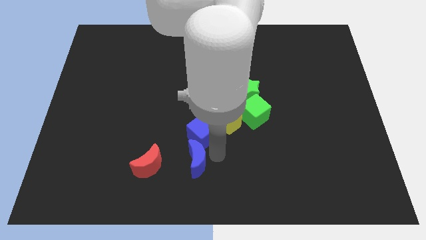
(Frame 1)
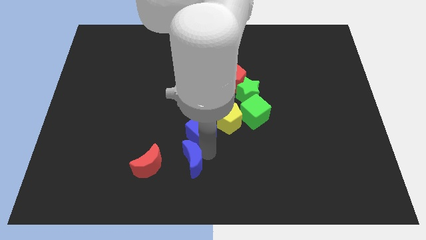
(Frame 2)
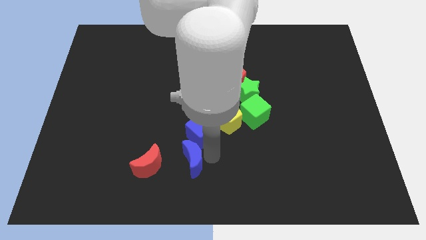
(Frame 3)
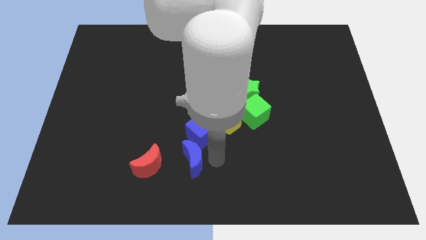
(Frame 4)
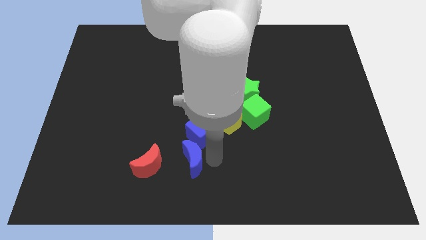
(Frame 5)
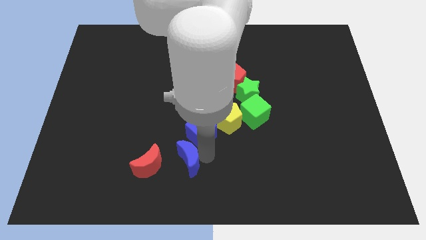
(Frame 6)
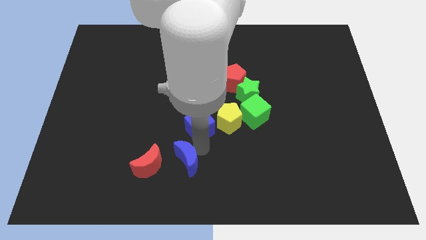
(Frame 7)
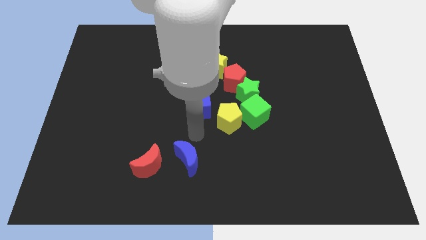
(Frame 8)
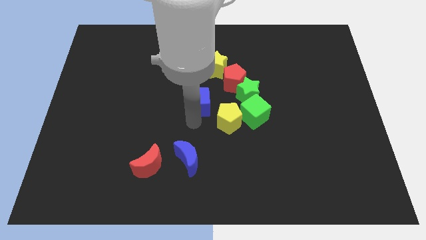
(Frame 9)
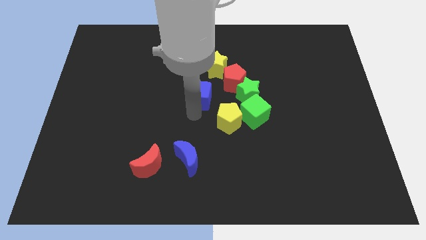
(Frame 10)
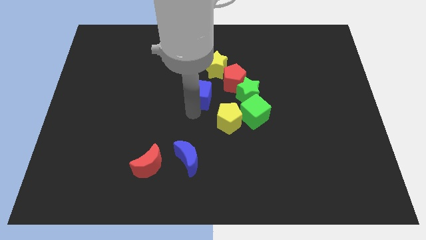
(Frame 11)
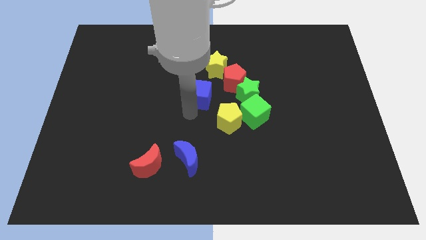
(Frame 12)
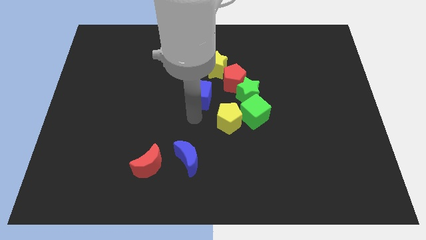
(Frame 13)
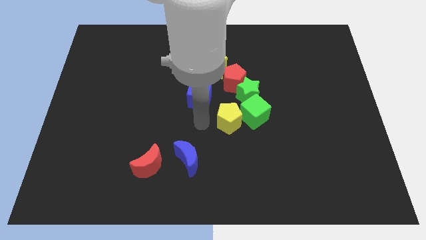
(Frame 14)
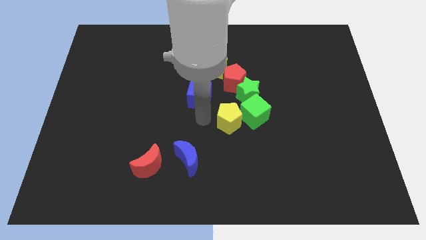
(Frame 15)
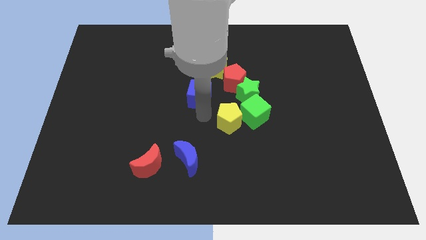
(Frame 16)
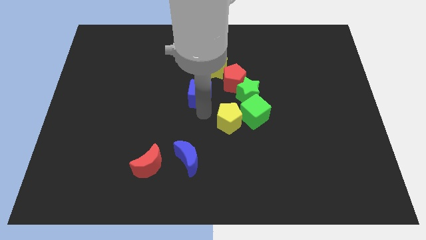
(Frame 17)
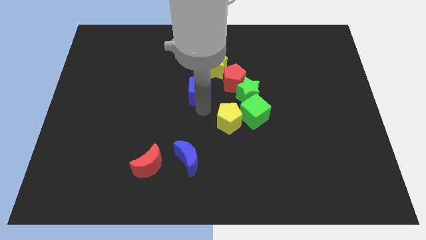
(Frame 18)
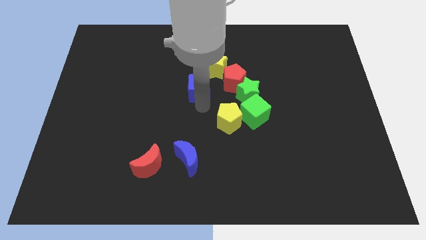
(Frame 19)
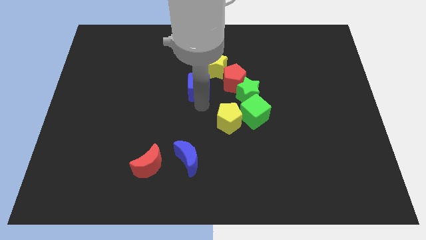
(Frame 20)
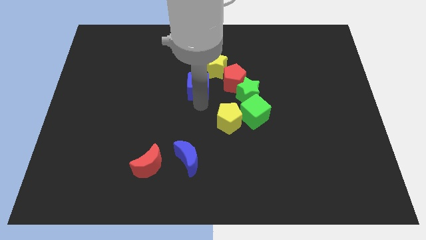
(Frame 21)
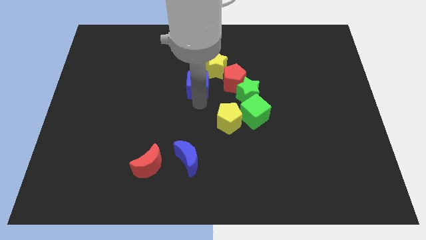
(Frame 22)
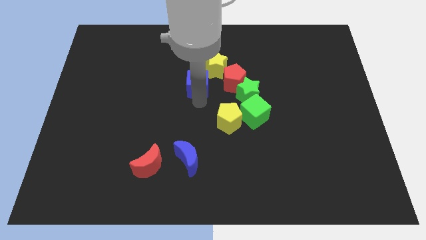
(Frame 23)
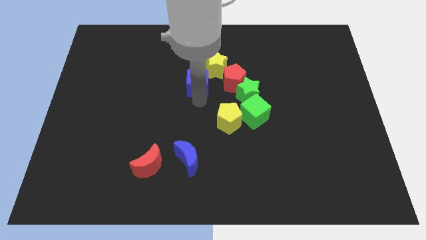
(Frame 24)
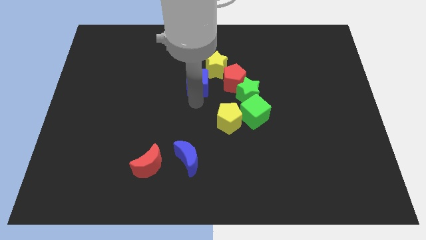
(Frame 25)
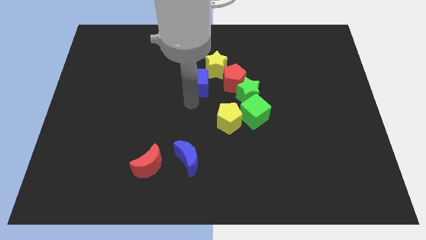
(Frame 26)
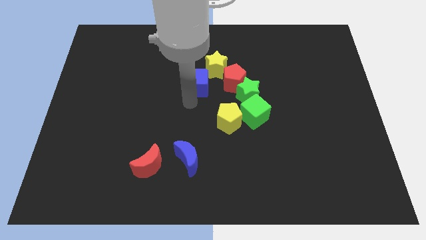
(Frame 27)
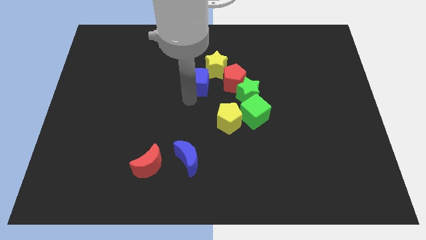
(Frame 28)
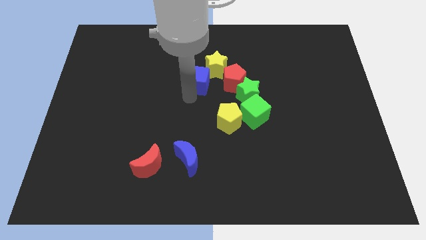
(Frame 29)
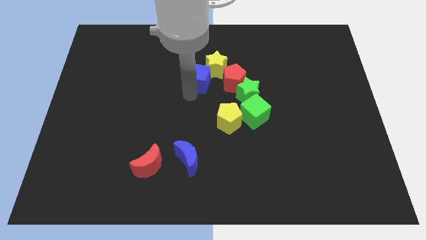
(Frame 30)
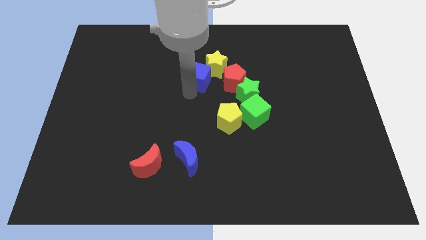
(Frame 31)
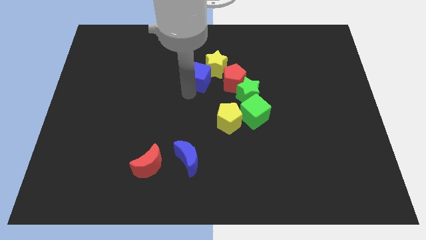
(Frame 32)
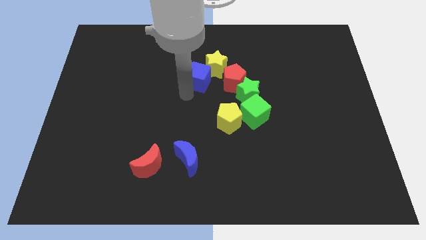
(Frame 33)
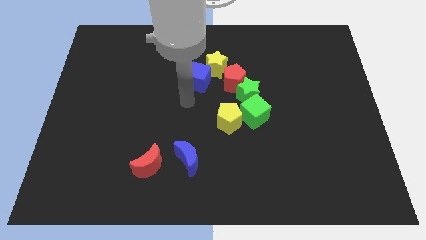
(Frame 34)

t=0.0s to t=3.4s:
push blue cube in to yellow star

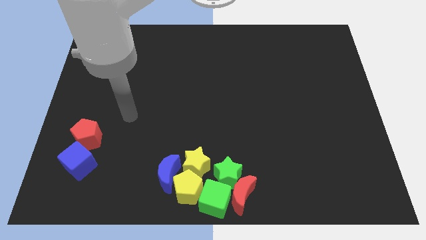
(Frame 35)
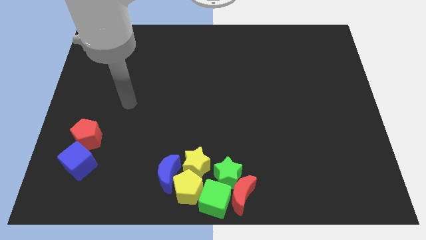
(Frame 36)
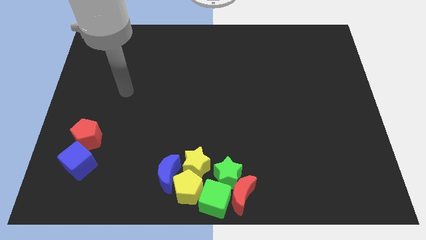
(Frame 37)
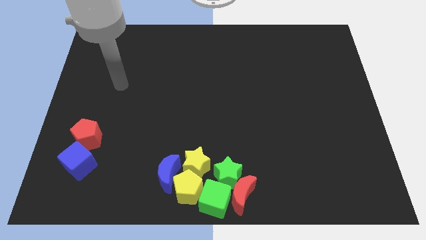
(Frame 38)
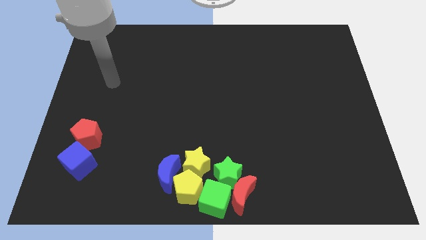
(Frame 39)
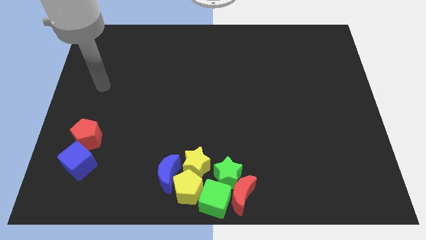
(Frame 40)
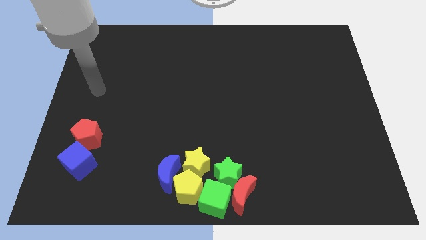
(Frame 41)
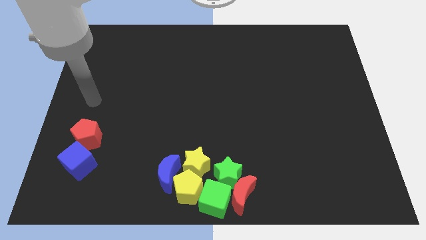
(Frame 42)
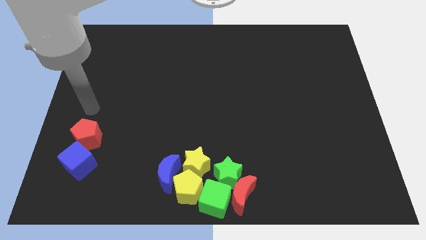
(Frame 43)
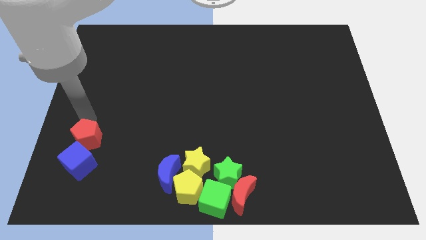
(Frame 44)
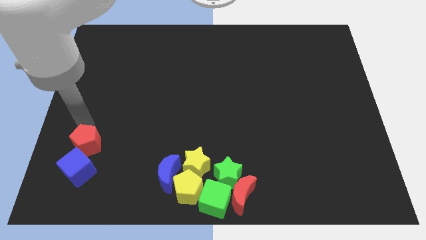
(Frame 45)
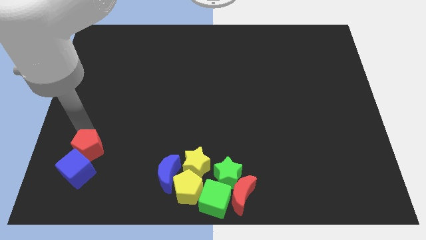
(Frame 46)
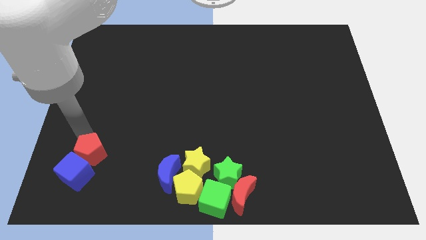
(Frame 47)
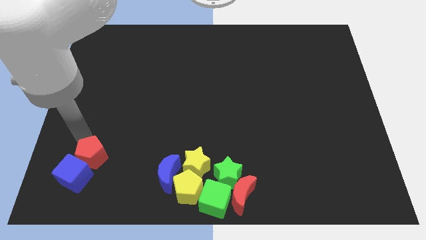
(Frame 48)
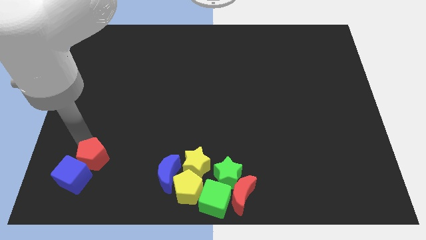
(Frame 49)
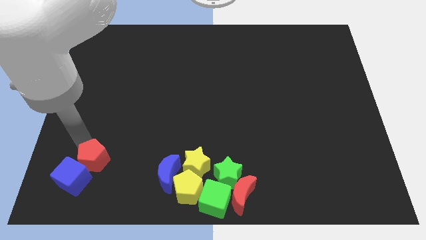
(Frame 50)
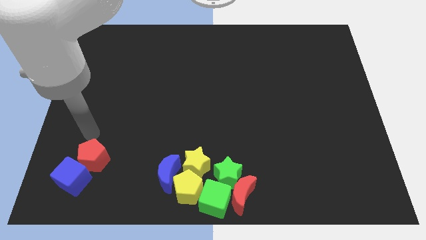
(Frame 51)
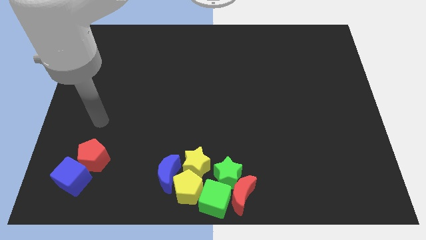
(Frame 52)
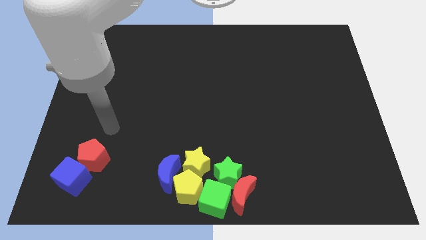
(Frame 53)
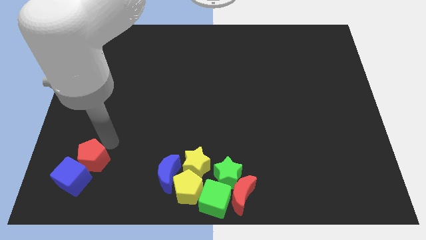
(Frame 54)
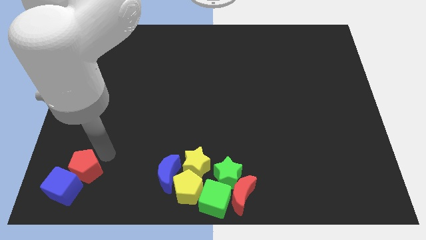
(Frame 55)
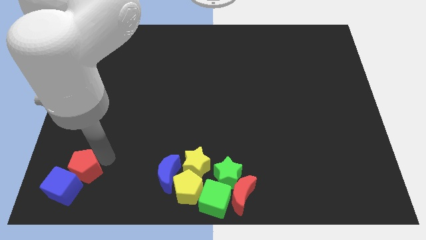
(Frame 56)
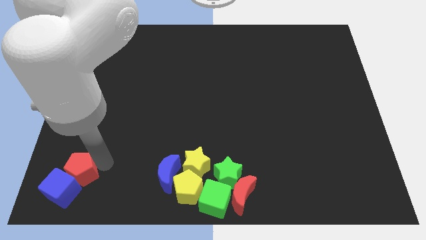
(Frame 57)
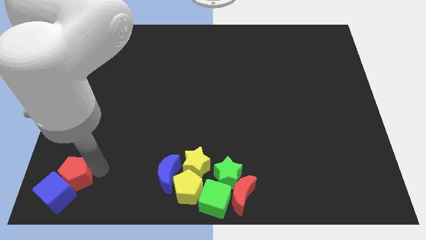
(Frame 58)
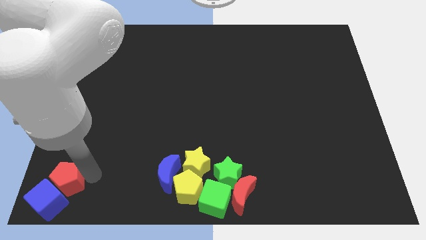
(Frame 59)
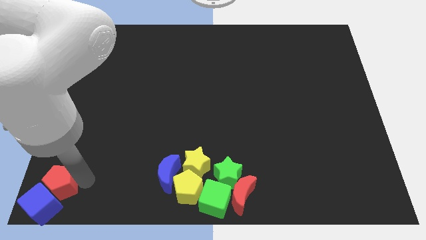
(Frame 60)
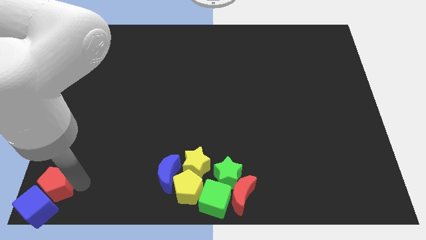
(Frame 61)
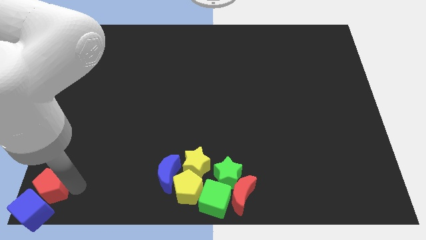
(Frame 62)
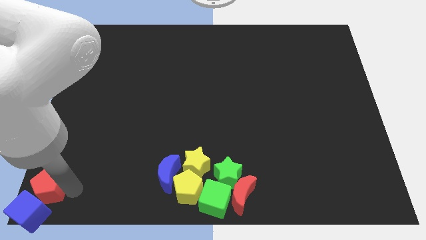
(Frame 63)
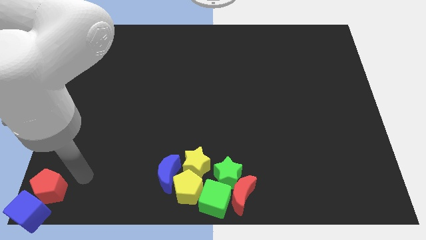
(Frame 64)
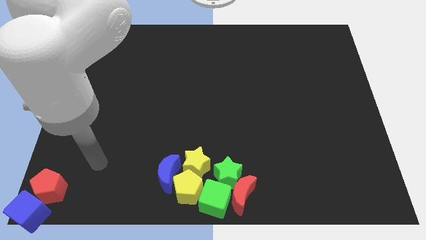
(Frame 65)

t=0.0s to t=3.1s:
place both red pentagon and blue cube to bottom left corner of the board

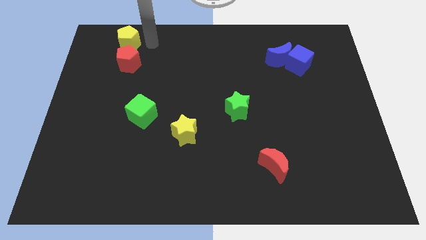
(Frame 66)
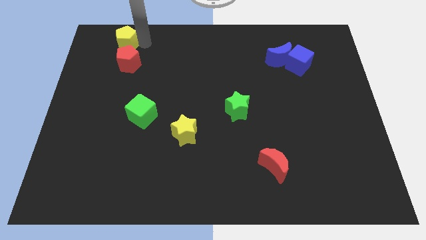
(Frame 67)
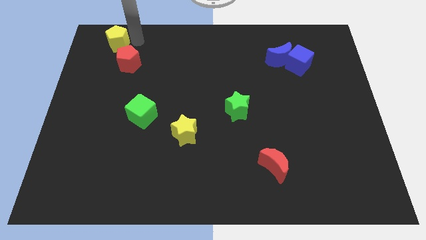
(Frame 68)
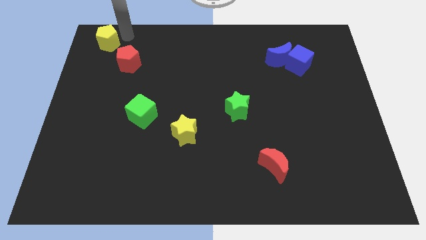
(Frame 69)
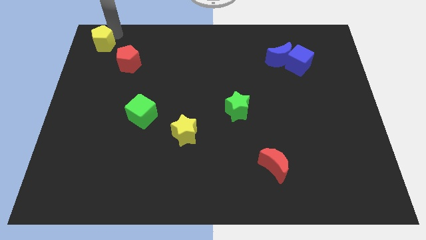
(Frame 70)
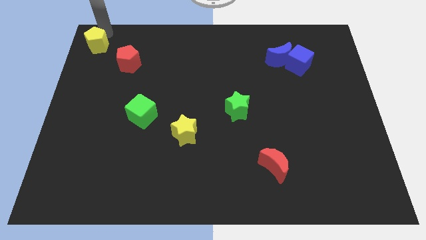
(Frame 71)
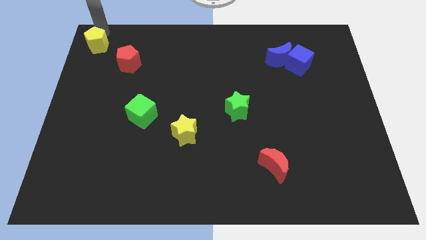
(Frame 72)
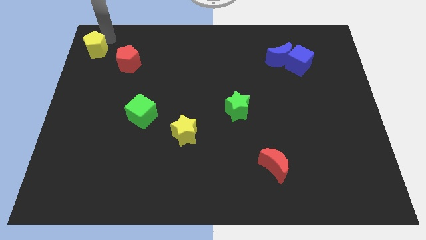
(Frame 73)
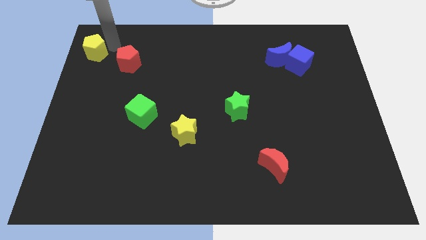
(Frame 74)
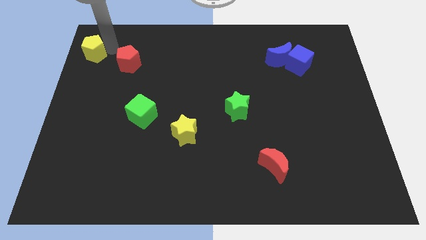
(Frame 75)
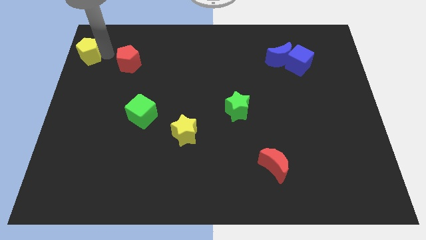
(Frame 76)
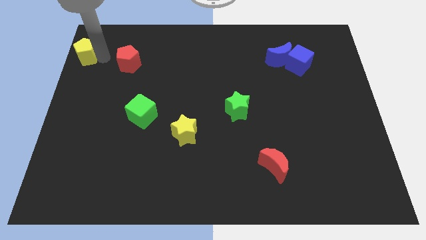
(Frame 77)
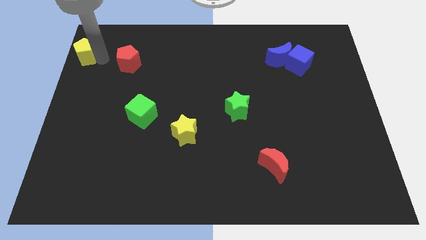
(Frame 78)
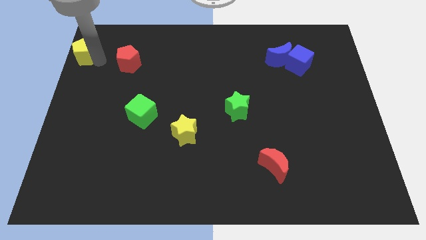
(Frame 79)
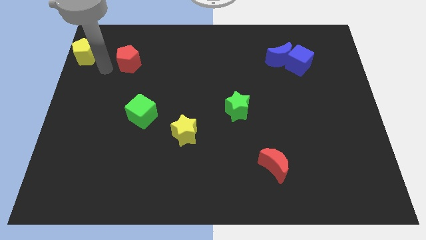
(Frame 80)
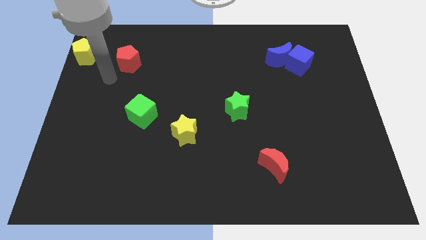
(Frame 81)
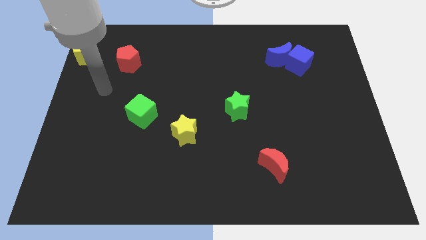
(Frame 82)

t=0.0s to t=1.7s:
push yellow pentagon to its left

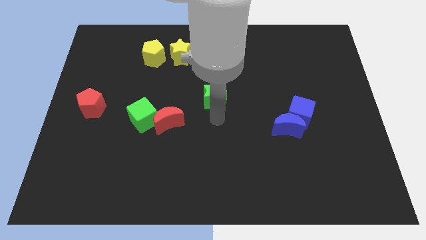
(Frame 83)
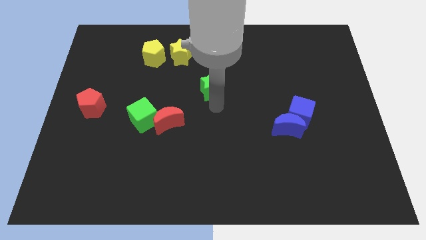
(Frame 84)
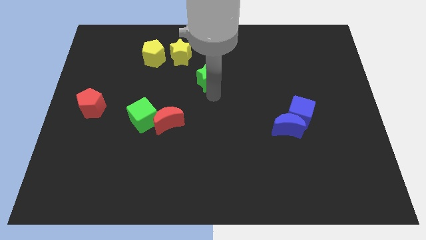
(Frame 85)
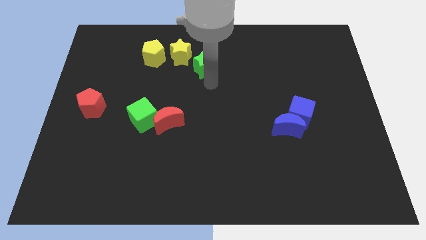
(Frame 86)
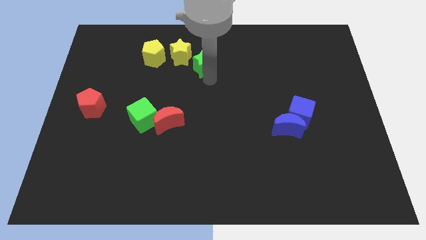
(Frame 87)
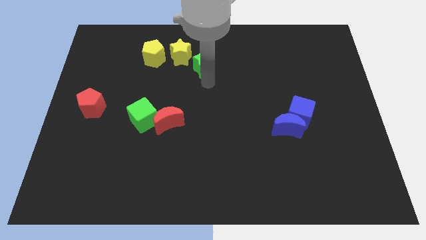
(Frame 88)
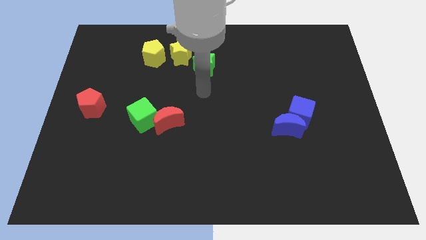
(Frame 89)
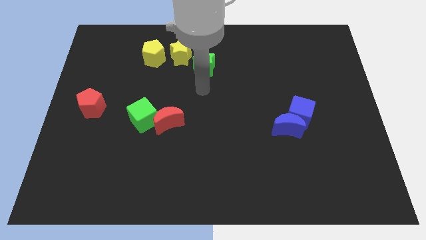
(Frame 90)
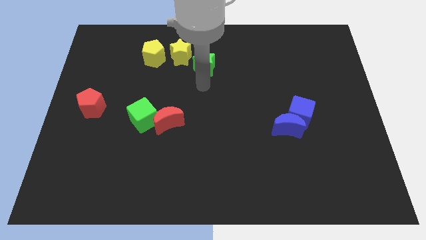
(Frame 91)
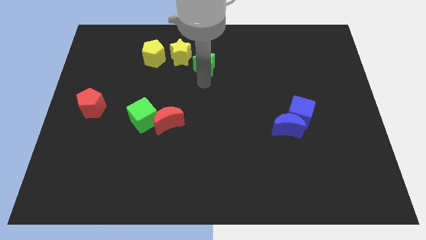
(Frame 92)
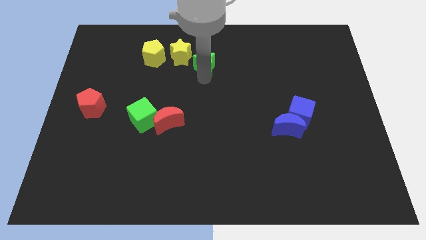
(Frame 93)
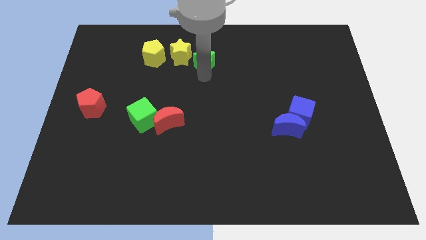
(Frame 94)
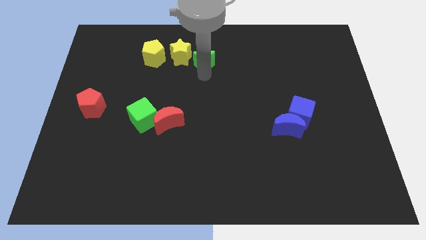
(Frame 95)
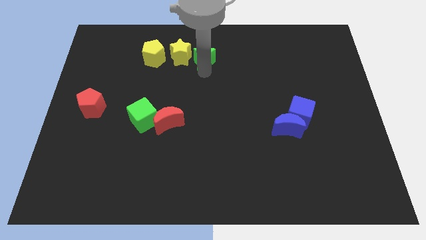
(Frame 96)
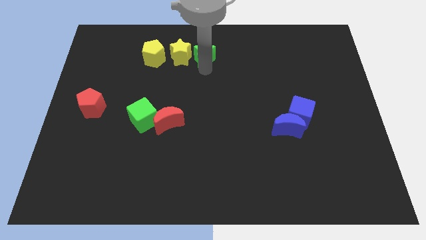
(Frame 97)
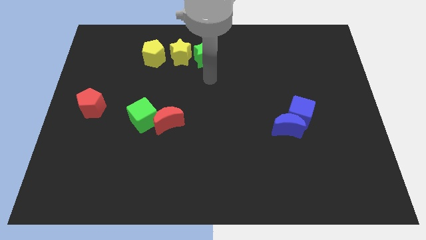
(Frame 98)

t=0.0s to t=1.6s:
put the green star to the right of the yellow star
